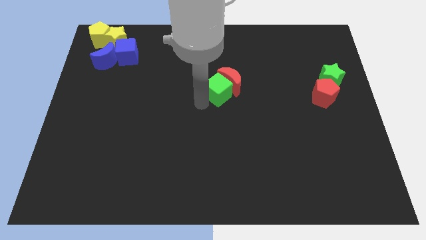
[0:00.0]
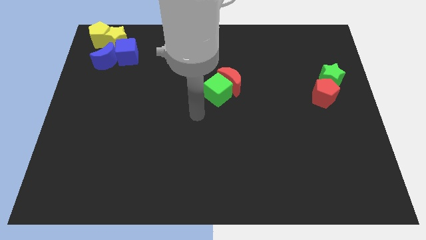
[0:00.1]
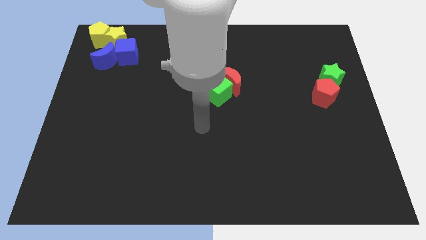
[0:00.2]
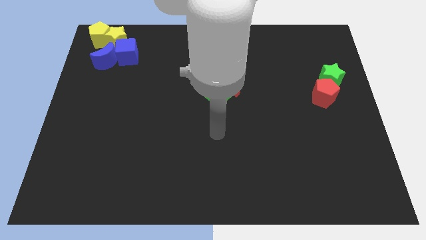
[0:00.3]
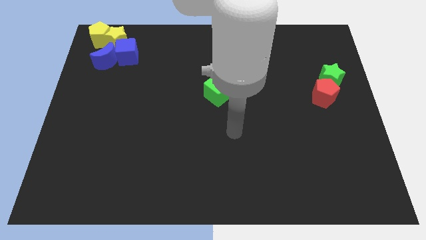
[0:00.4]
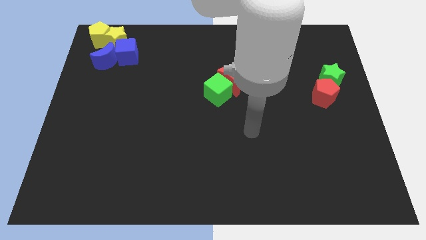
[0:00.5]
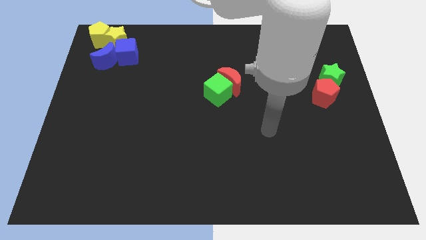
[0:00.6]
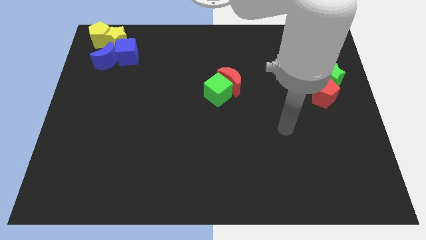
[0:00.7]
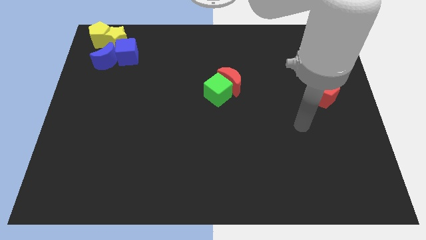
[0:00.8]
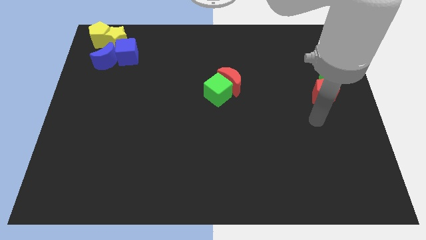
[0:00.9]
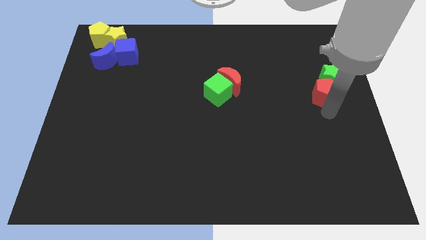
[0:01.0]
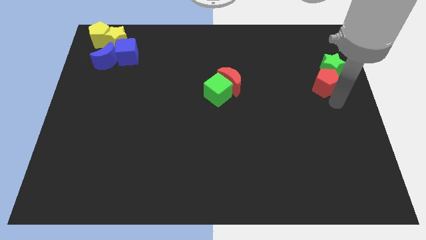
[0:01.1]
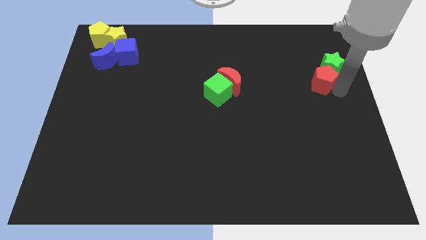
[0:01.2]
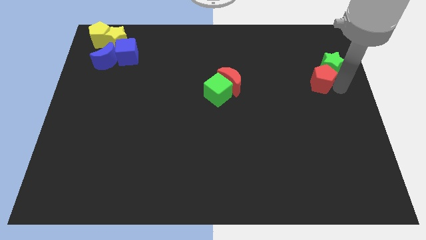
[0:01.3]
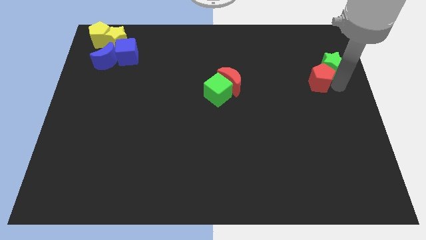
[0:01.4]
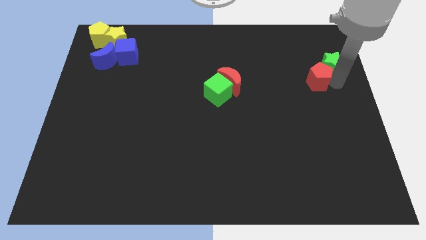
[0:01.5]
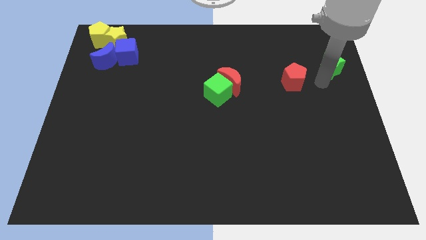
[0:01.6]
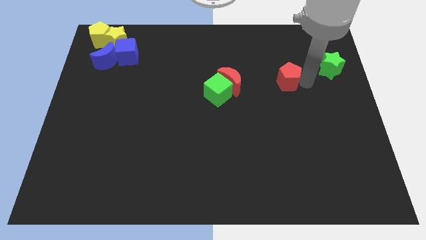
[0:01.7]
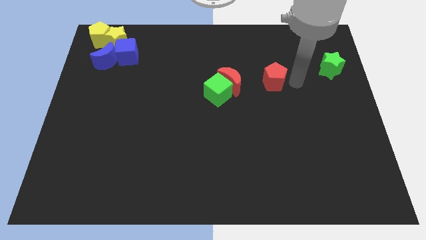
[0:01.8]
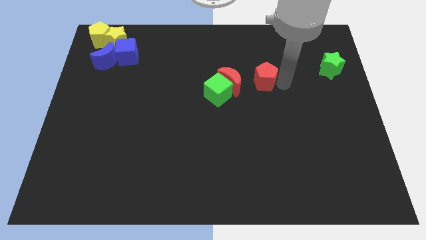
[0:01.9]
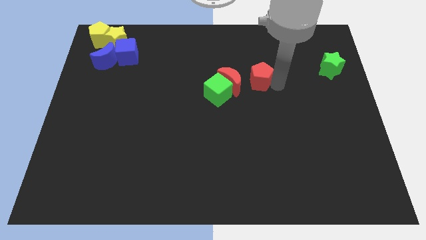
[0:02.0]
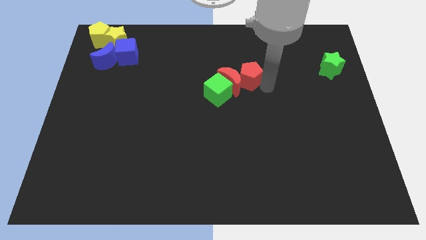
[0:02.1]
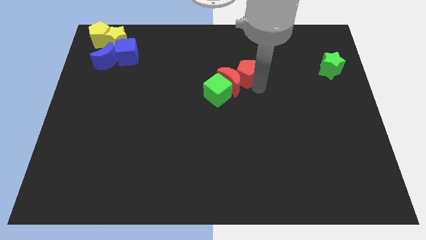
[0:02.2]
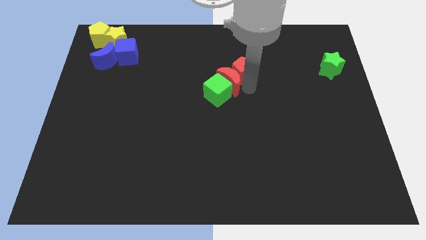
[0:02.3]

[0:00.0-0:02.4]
place red pentagon above red crescent

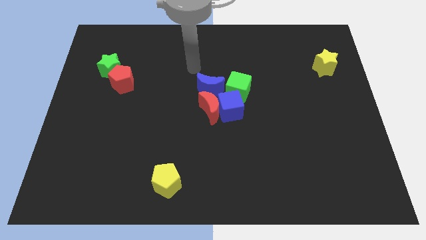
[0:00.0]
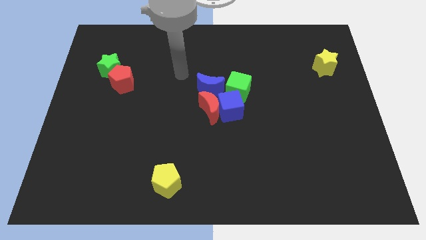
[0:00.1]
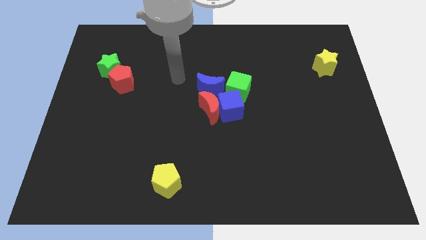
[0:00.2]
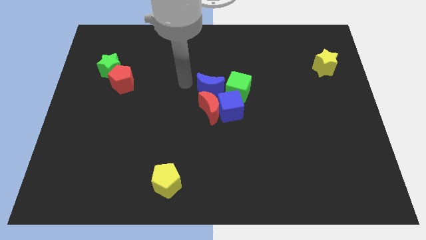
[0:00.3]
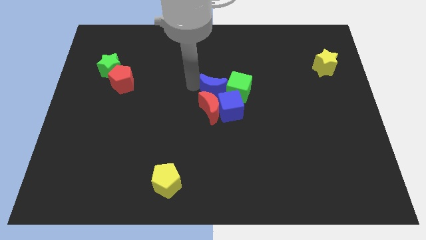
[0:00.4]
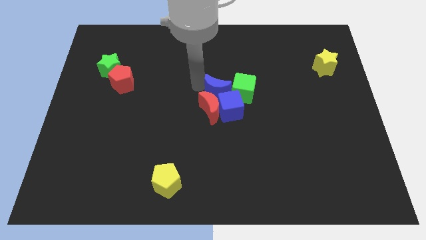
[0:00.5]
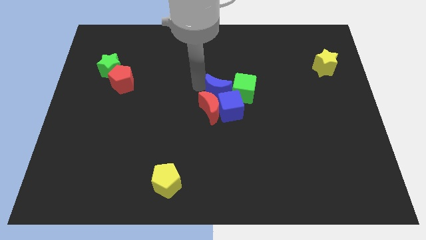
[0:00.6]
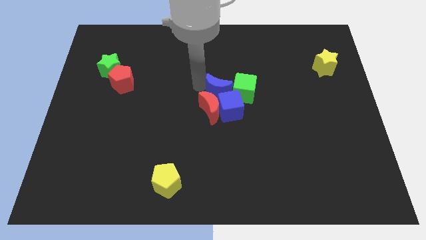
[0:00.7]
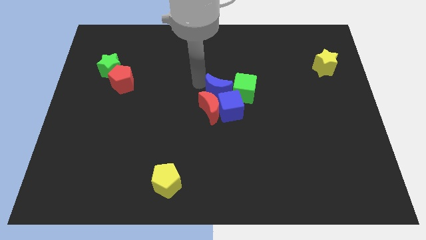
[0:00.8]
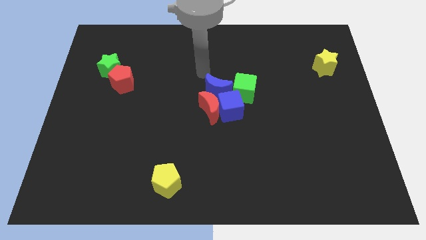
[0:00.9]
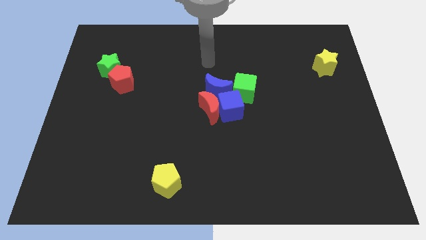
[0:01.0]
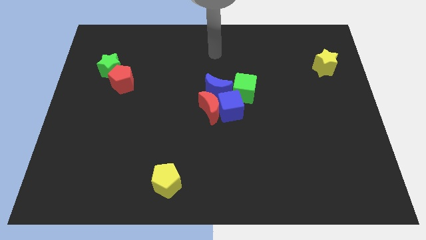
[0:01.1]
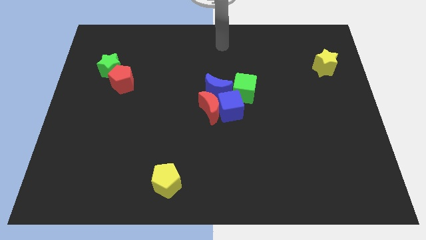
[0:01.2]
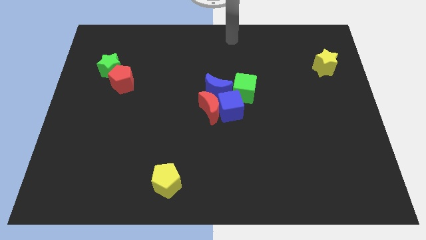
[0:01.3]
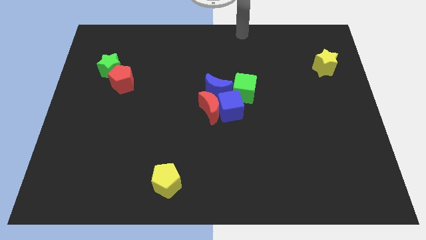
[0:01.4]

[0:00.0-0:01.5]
slightly move green cube by pushing blue moon

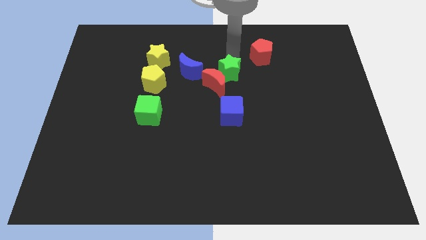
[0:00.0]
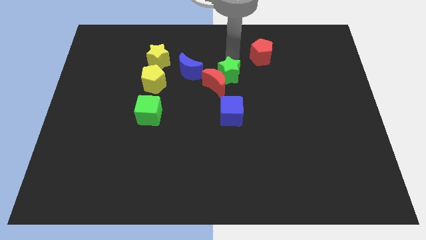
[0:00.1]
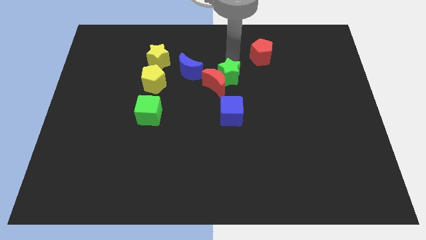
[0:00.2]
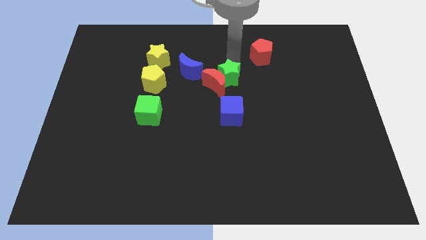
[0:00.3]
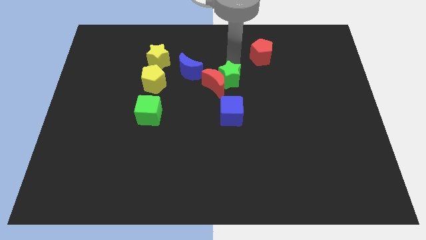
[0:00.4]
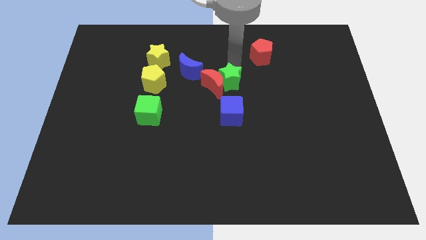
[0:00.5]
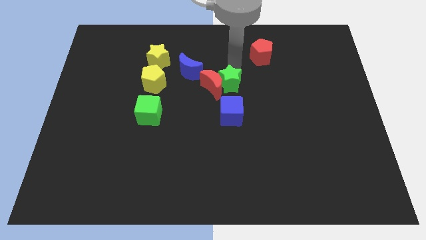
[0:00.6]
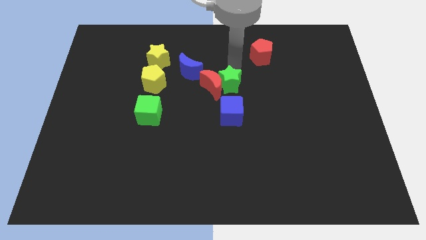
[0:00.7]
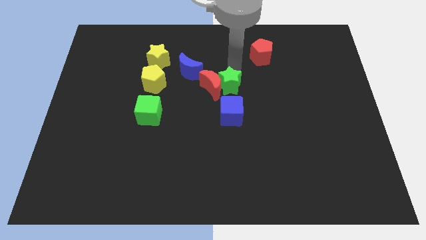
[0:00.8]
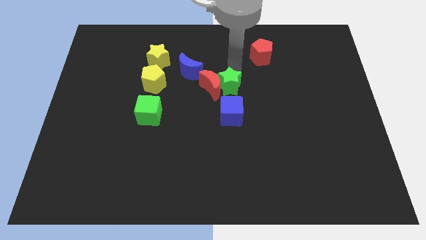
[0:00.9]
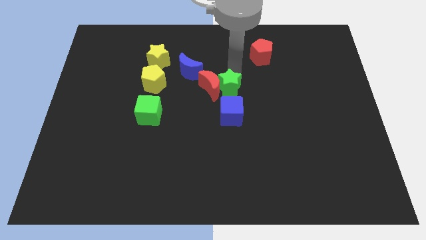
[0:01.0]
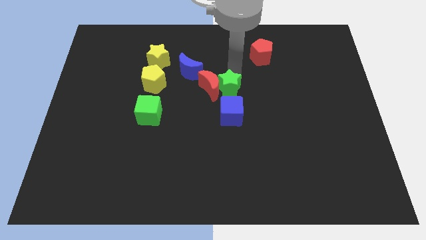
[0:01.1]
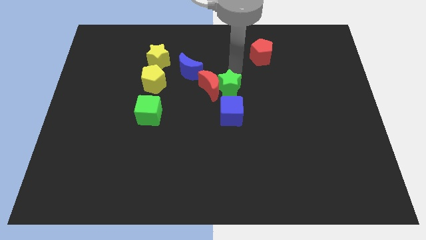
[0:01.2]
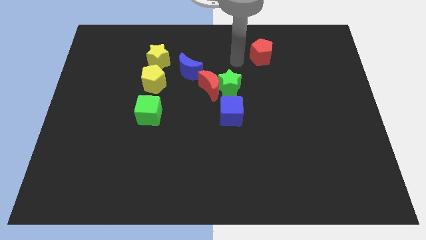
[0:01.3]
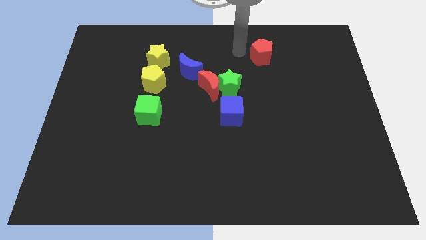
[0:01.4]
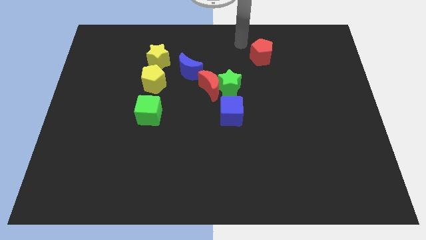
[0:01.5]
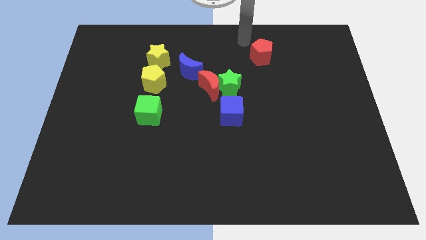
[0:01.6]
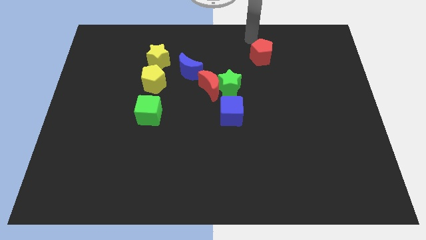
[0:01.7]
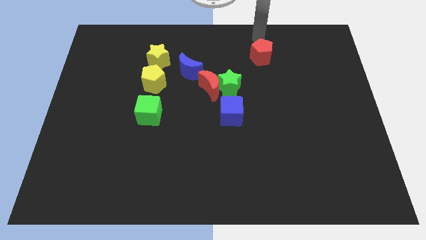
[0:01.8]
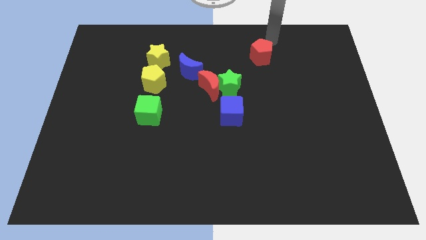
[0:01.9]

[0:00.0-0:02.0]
move your arm to the top left of the red pentagon

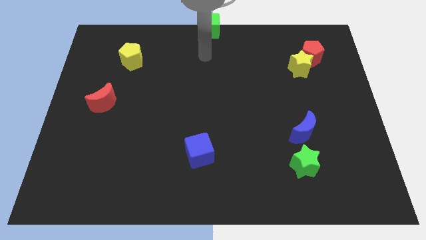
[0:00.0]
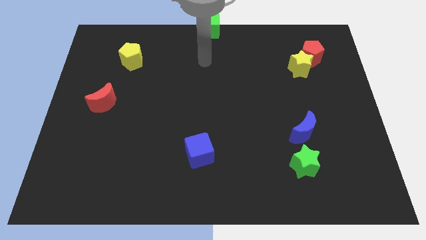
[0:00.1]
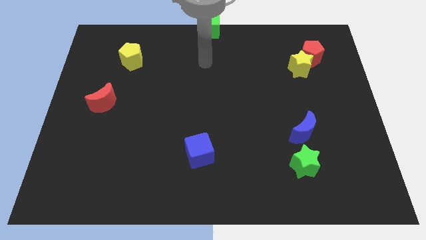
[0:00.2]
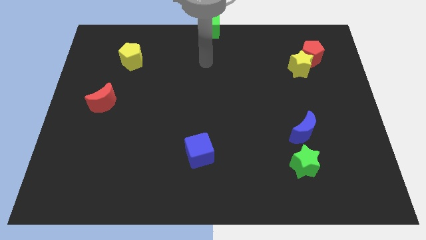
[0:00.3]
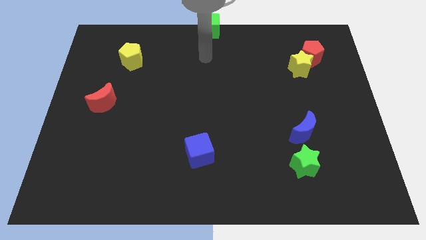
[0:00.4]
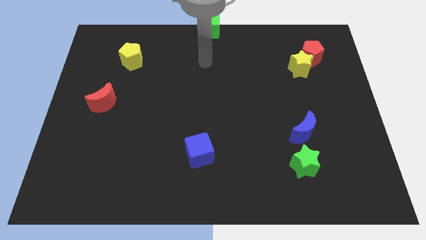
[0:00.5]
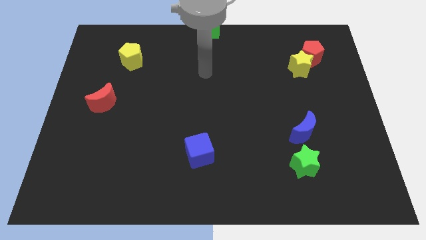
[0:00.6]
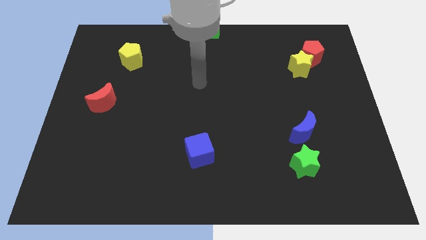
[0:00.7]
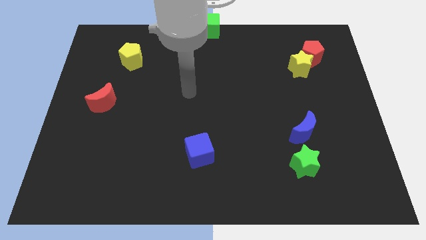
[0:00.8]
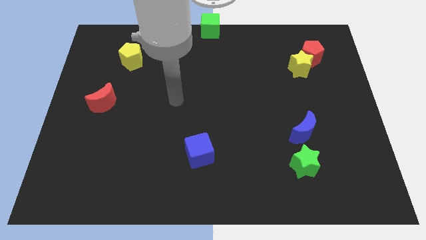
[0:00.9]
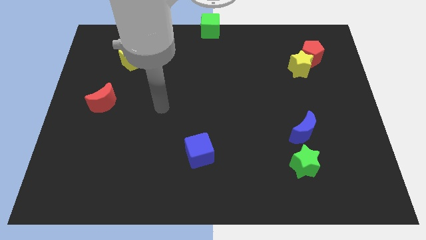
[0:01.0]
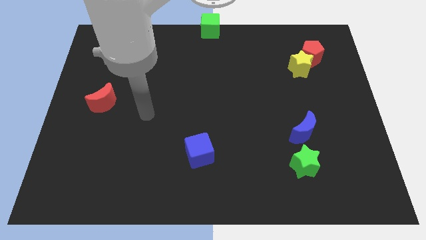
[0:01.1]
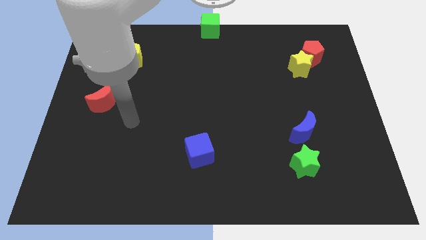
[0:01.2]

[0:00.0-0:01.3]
point your arm towards the red moon

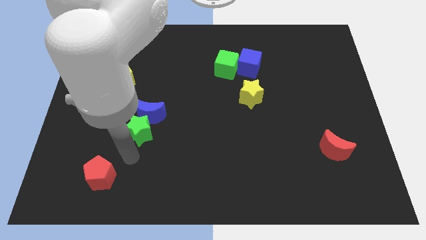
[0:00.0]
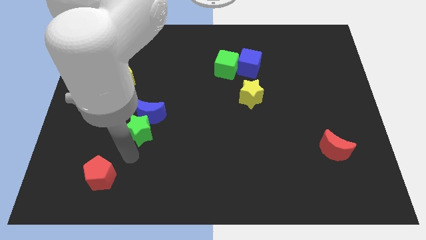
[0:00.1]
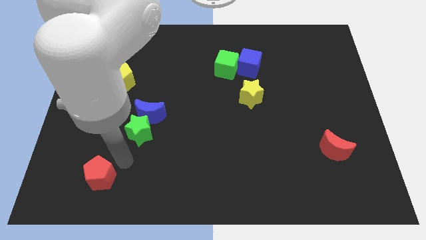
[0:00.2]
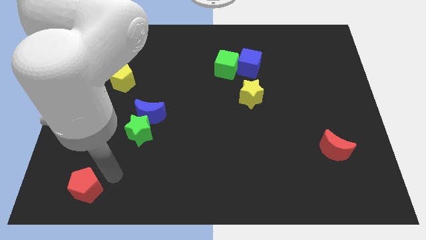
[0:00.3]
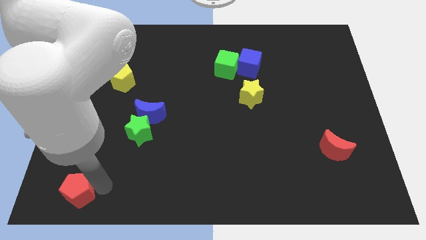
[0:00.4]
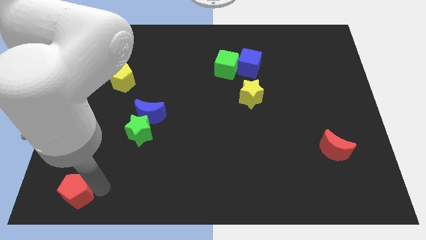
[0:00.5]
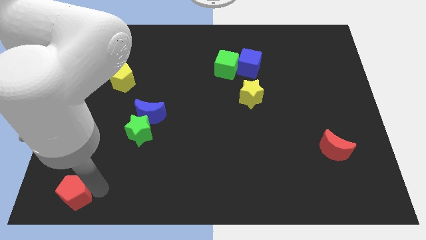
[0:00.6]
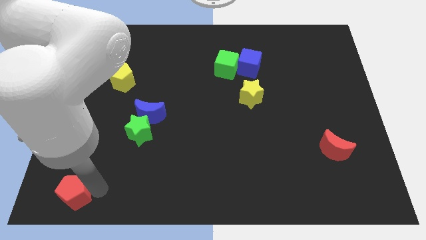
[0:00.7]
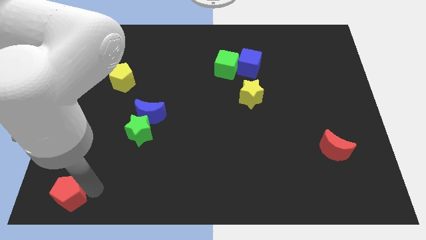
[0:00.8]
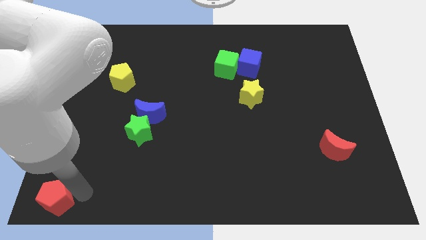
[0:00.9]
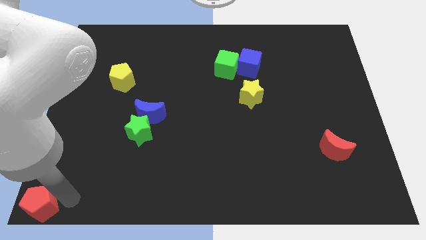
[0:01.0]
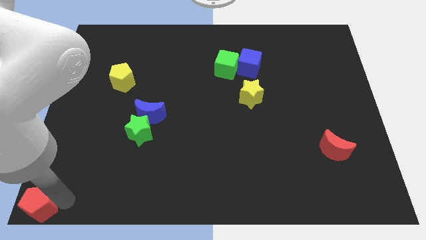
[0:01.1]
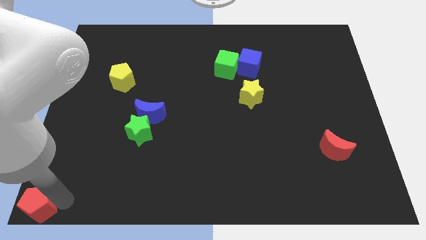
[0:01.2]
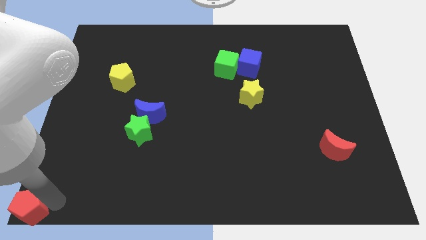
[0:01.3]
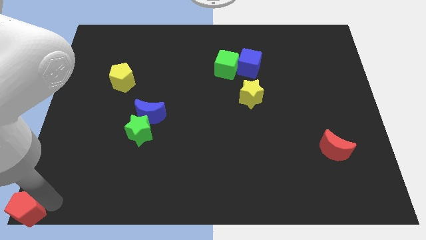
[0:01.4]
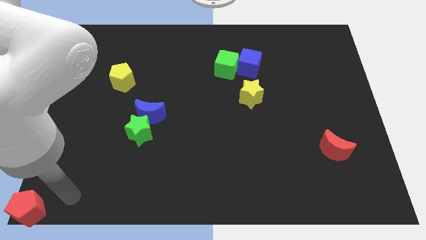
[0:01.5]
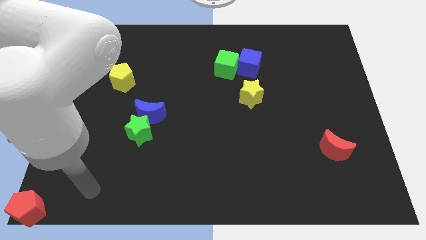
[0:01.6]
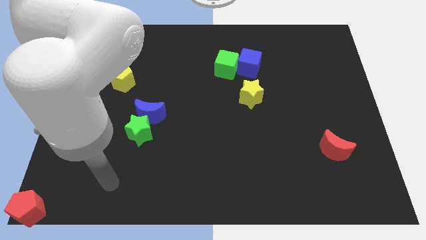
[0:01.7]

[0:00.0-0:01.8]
place the red pentagon at the bottom left corner of the table
